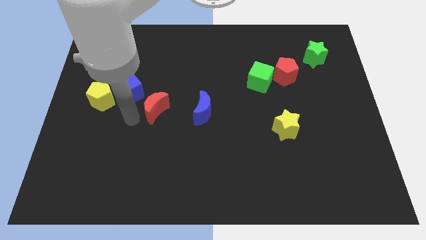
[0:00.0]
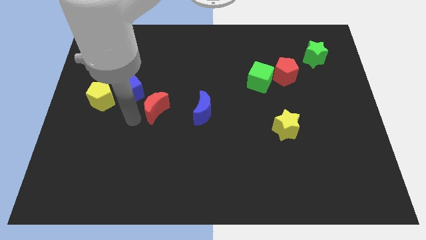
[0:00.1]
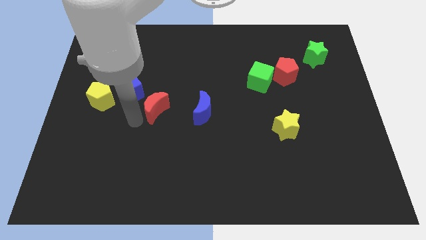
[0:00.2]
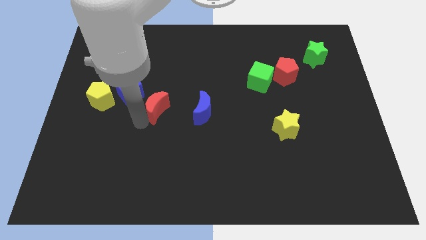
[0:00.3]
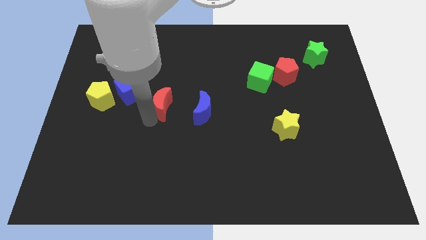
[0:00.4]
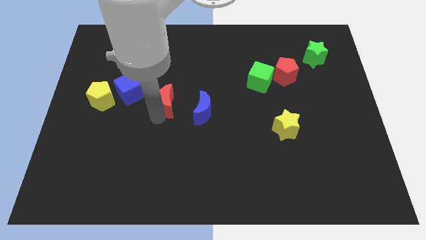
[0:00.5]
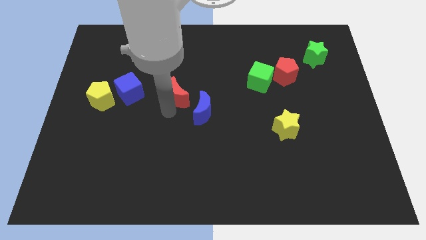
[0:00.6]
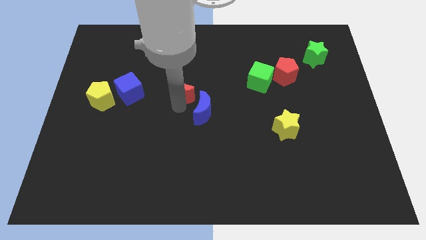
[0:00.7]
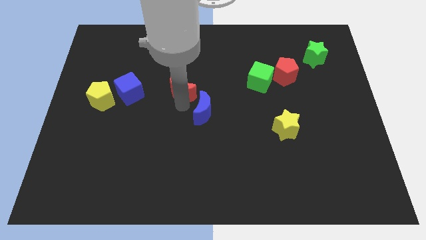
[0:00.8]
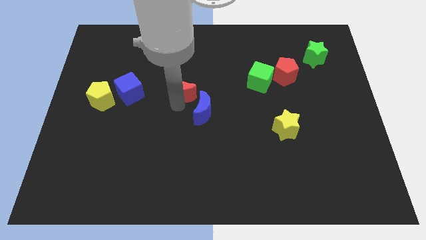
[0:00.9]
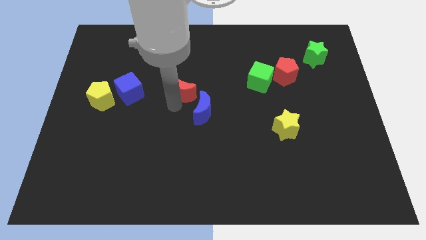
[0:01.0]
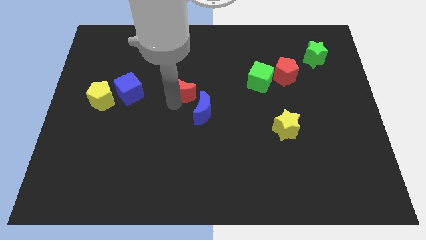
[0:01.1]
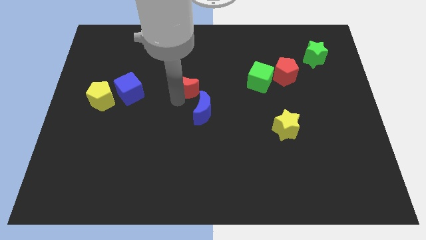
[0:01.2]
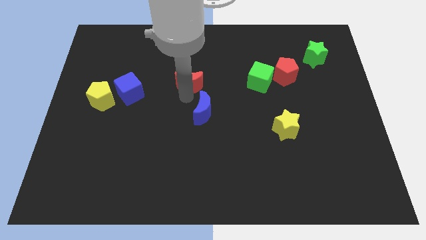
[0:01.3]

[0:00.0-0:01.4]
place the red crescent to the top left of the blue moon

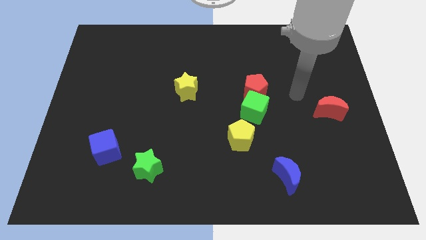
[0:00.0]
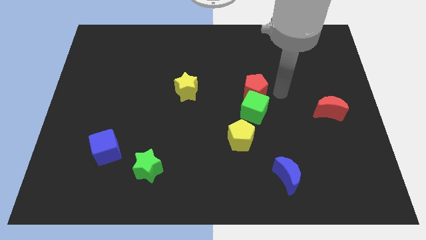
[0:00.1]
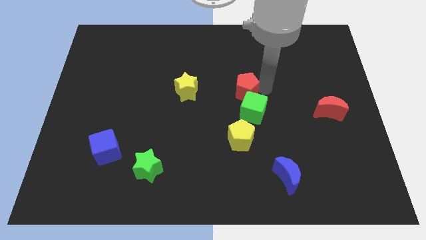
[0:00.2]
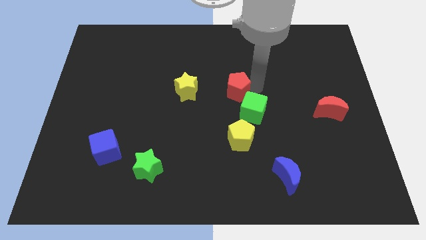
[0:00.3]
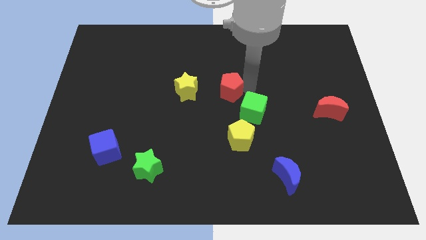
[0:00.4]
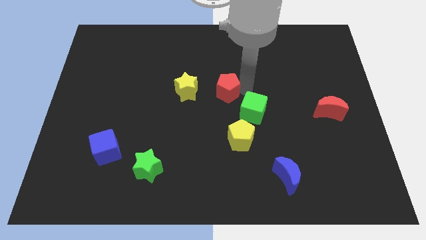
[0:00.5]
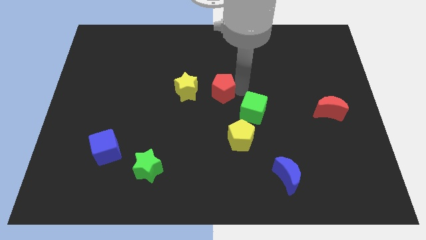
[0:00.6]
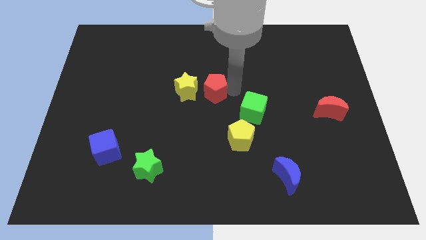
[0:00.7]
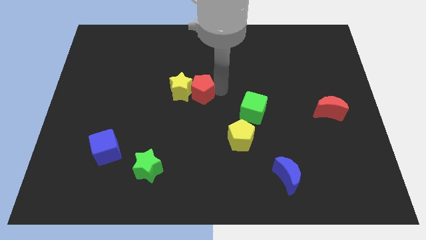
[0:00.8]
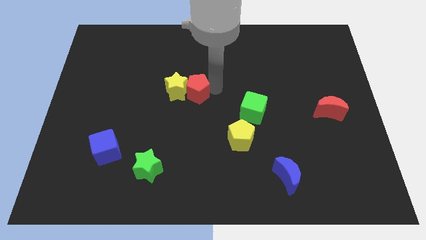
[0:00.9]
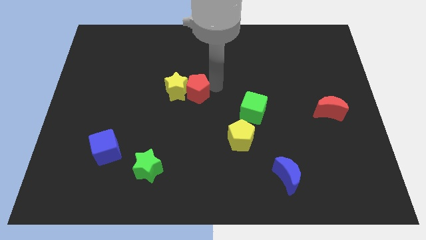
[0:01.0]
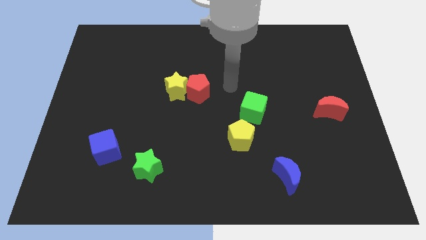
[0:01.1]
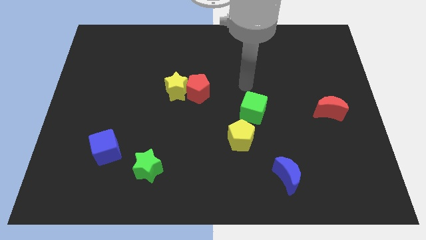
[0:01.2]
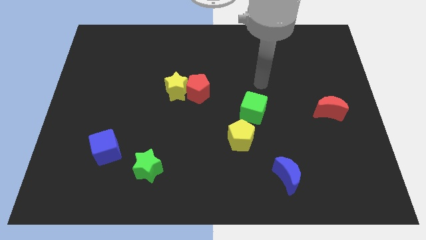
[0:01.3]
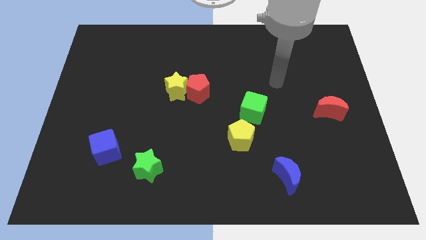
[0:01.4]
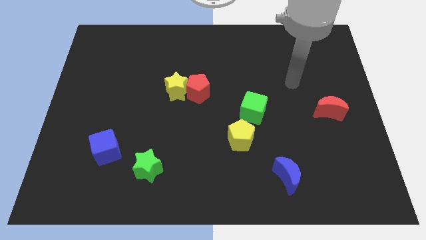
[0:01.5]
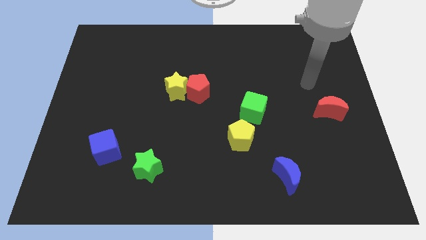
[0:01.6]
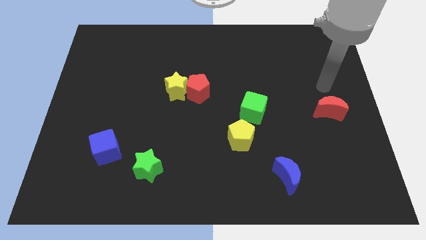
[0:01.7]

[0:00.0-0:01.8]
move red pentagon right beside the yellow star

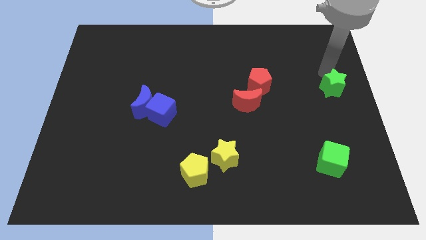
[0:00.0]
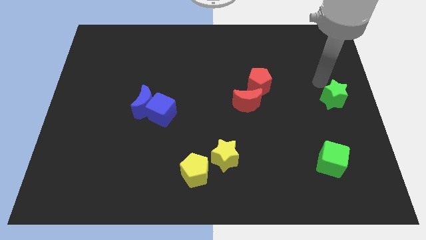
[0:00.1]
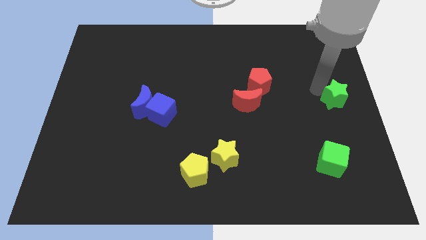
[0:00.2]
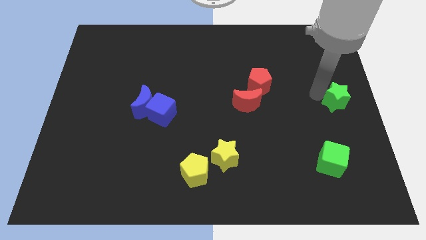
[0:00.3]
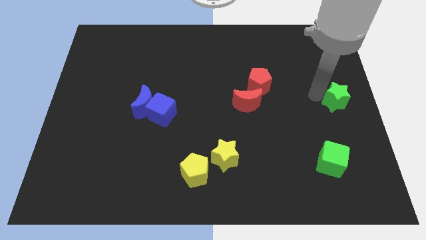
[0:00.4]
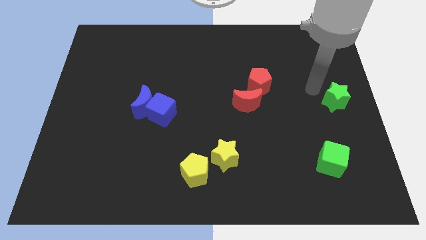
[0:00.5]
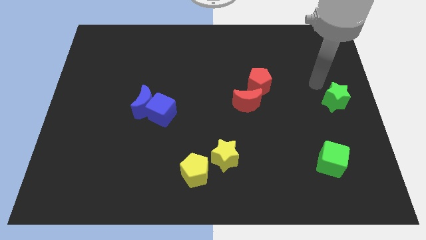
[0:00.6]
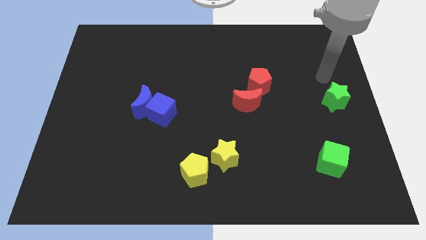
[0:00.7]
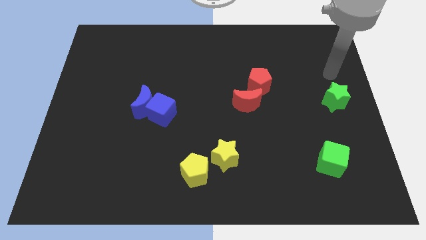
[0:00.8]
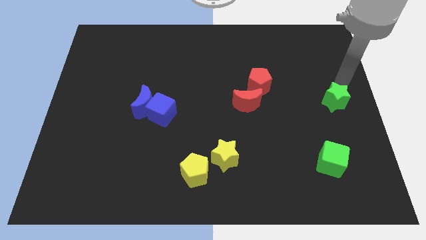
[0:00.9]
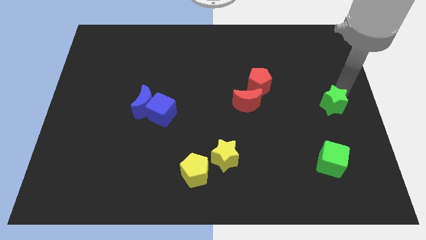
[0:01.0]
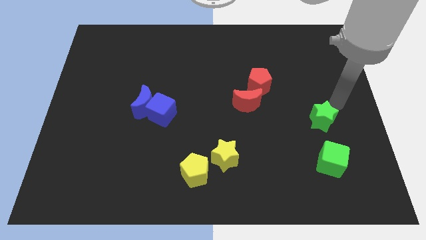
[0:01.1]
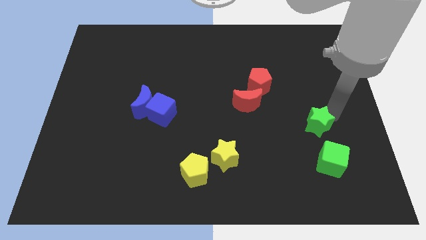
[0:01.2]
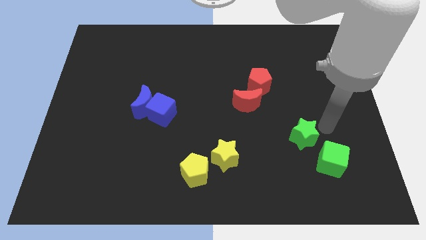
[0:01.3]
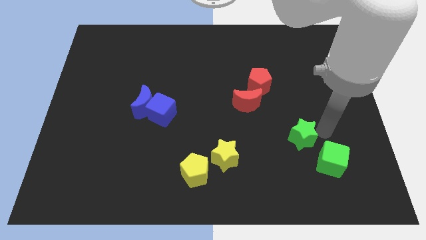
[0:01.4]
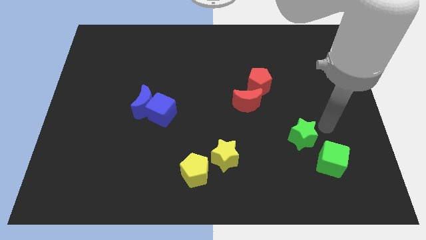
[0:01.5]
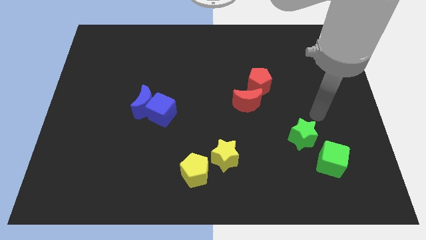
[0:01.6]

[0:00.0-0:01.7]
push the green star to the top left side of the green cube

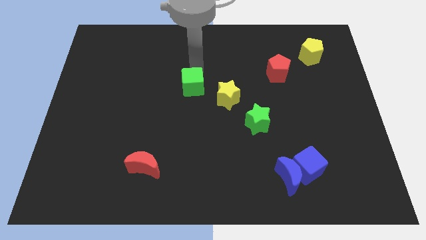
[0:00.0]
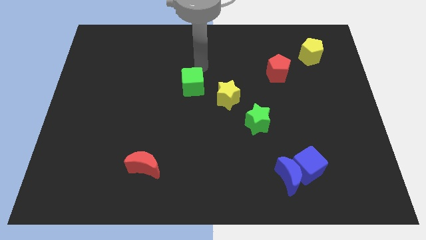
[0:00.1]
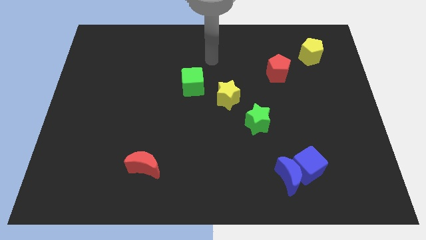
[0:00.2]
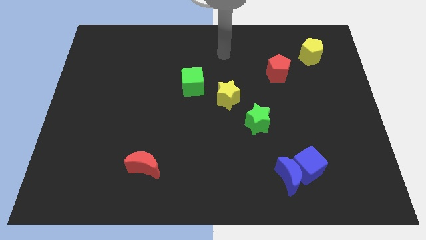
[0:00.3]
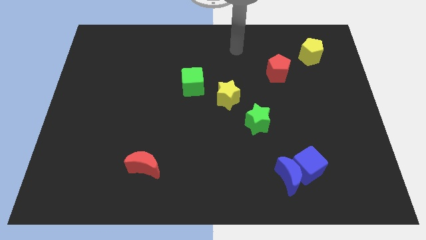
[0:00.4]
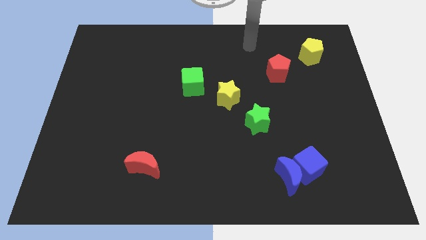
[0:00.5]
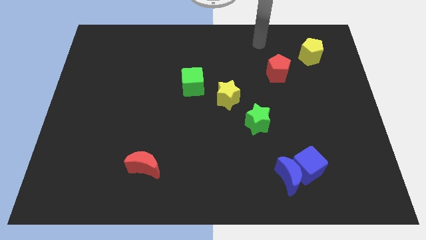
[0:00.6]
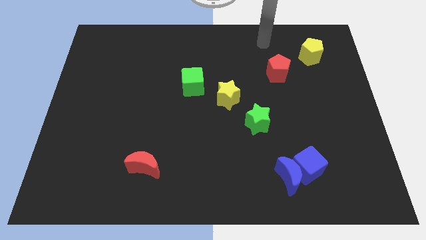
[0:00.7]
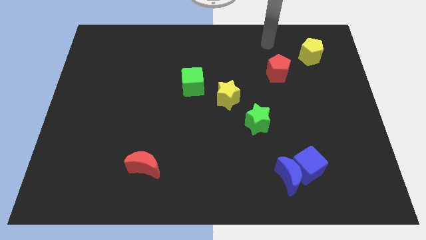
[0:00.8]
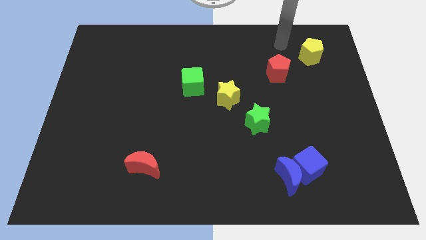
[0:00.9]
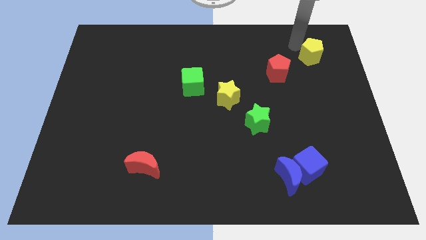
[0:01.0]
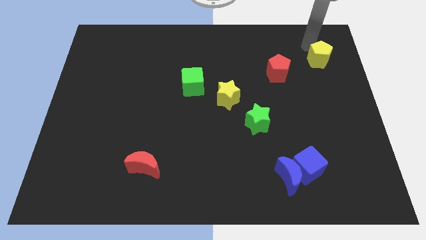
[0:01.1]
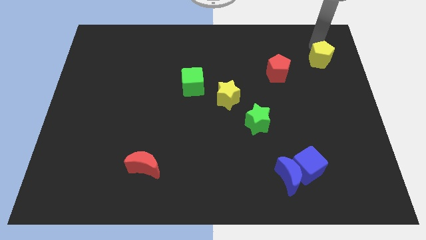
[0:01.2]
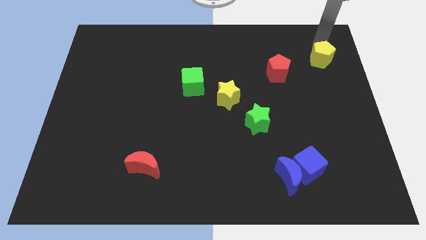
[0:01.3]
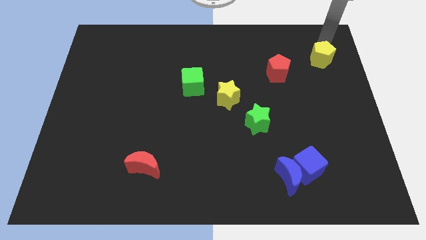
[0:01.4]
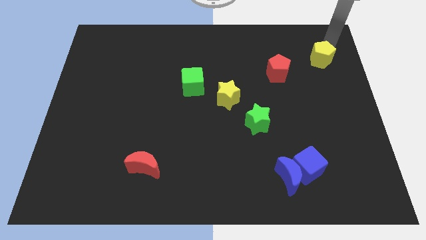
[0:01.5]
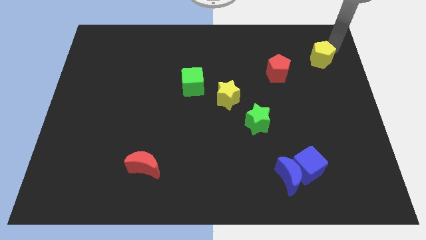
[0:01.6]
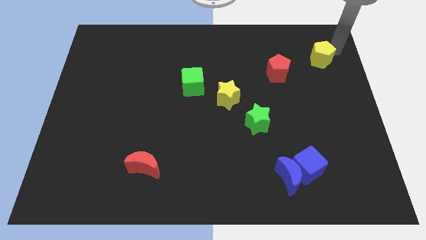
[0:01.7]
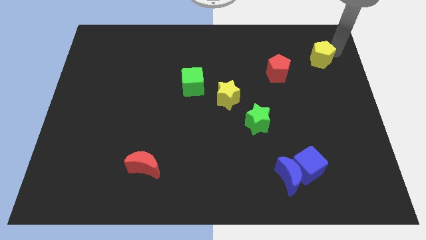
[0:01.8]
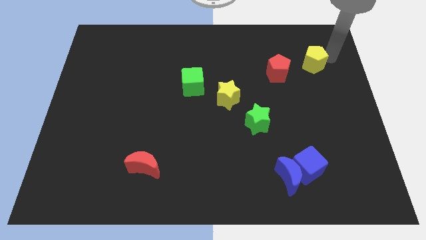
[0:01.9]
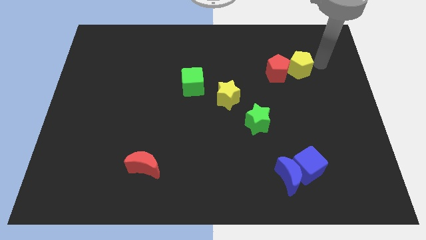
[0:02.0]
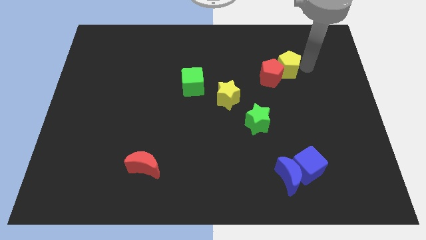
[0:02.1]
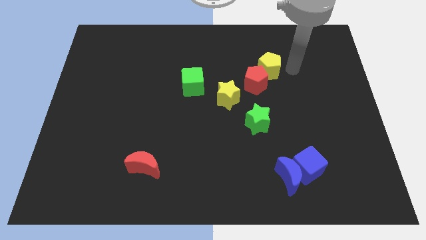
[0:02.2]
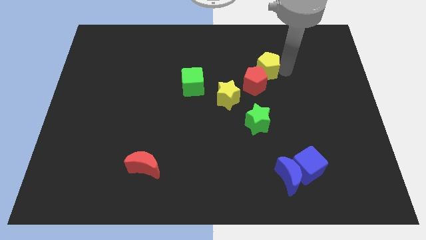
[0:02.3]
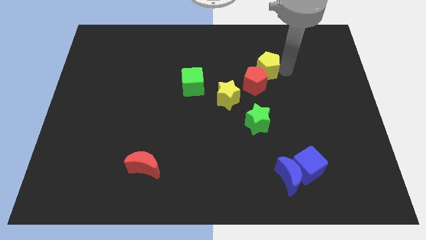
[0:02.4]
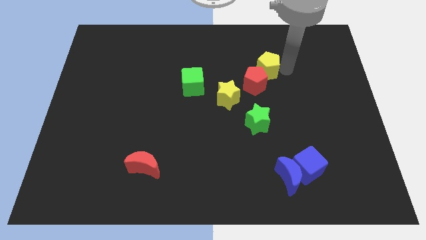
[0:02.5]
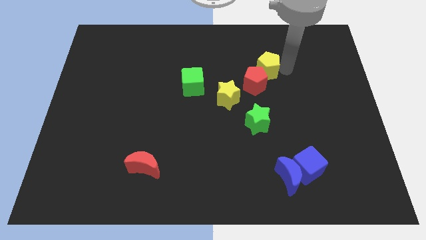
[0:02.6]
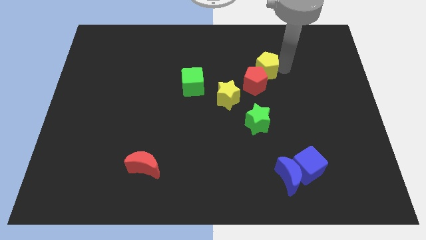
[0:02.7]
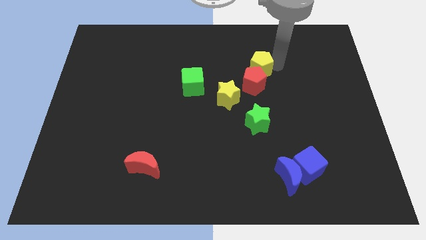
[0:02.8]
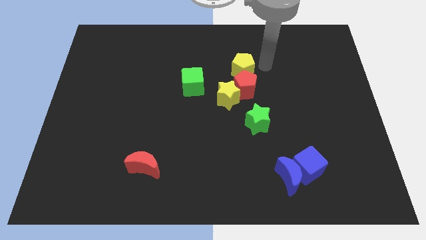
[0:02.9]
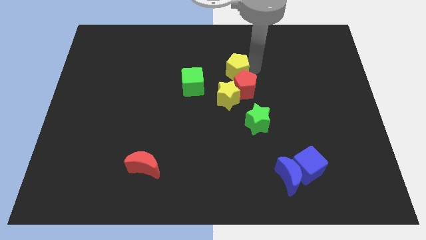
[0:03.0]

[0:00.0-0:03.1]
push the red pentagon slightly with yellow pentagon

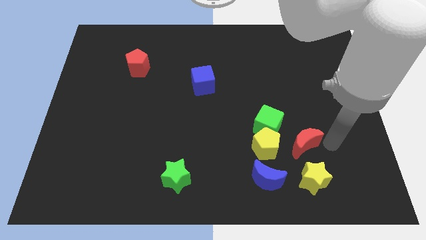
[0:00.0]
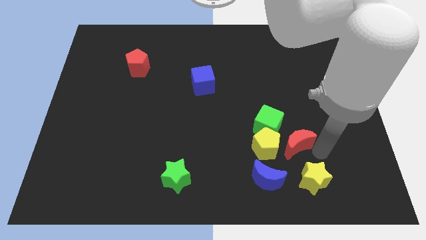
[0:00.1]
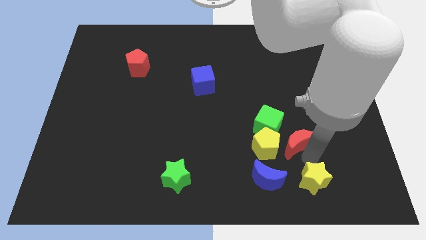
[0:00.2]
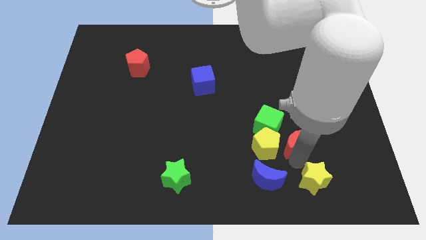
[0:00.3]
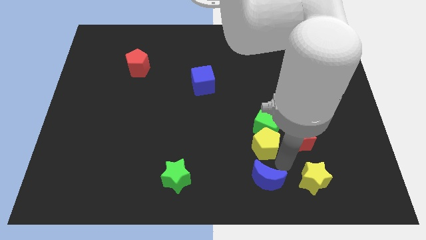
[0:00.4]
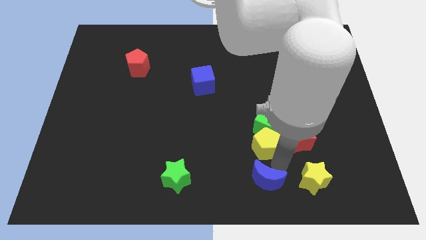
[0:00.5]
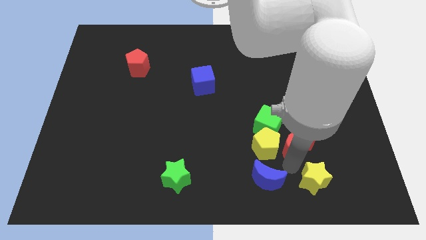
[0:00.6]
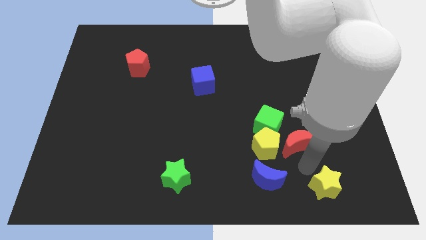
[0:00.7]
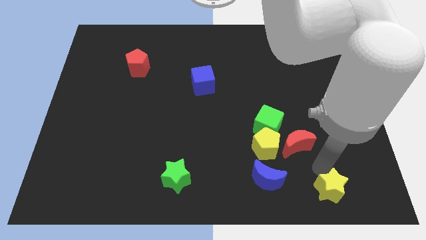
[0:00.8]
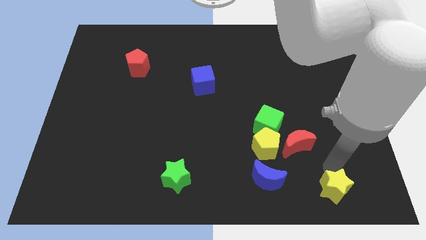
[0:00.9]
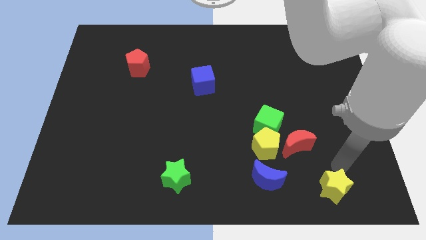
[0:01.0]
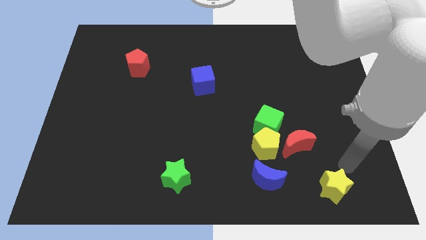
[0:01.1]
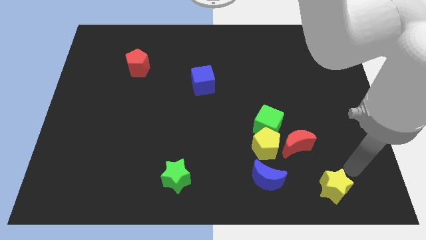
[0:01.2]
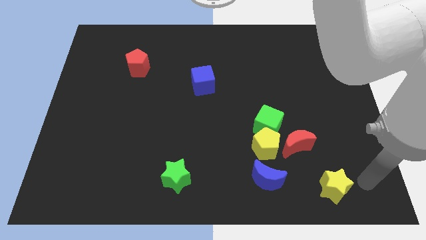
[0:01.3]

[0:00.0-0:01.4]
push the yellow star towards the bottom right of the board
